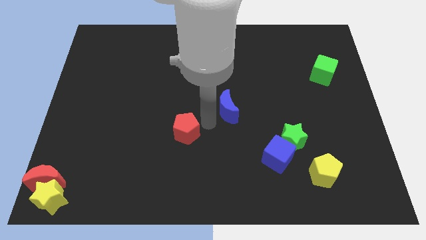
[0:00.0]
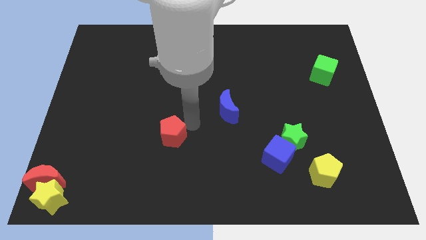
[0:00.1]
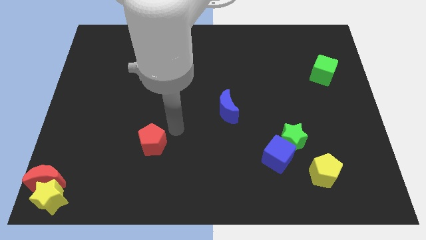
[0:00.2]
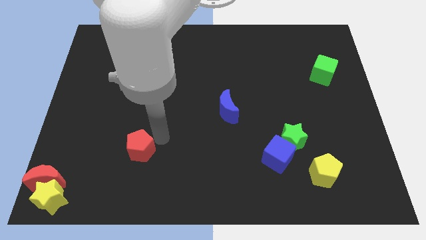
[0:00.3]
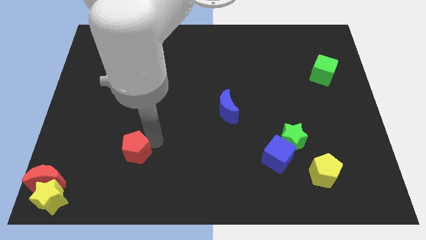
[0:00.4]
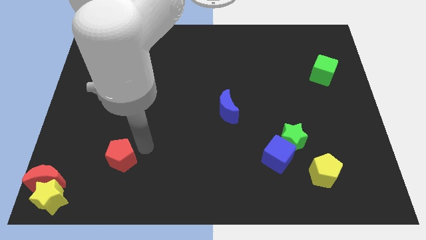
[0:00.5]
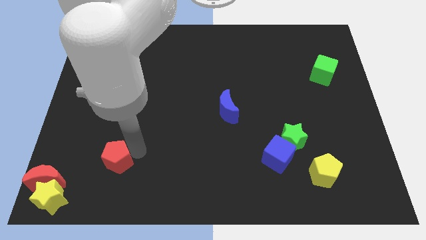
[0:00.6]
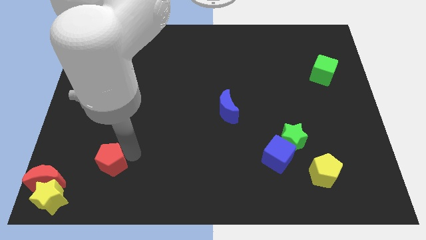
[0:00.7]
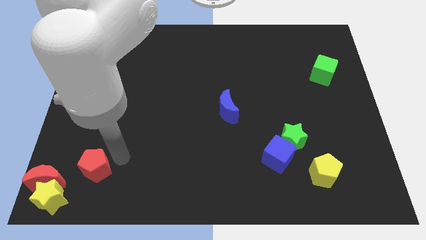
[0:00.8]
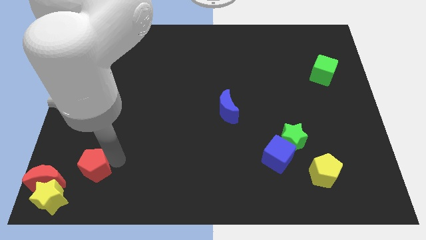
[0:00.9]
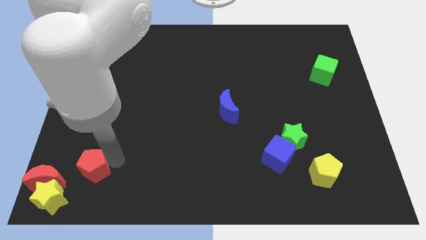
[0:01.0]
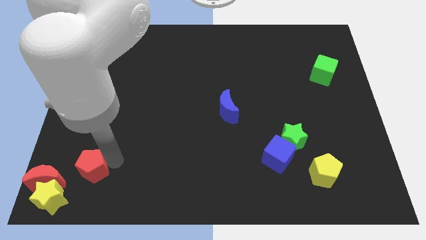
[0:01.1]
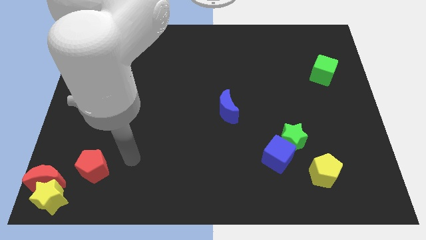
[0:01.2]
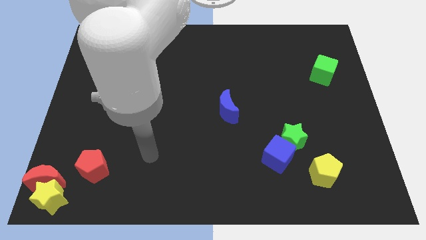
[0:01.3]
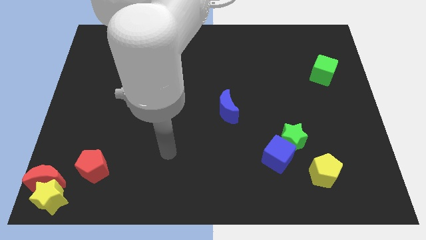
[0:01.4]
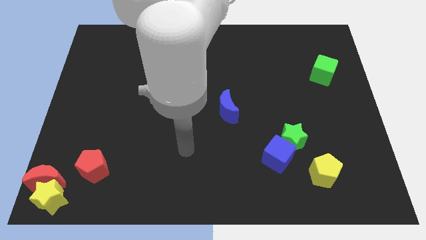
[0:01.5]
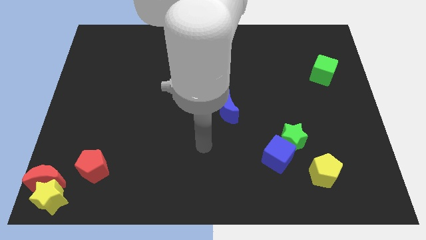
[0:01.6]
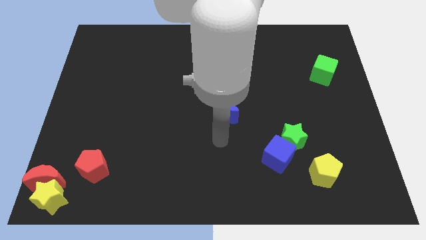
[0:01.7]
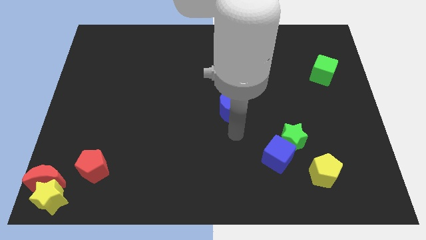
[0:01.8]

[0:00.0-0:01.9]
move the push the red pentagon opposite to the red crescent

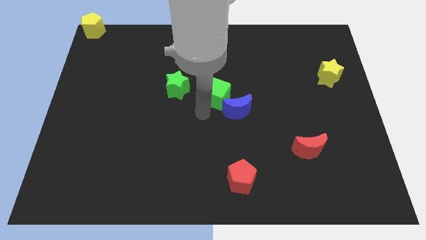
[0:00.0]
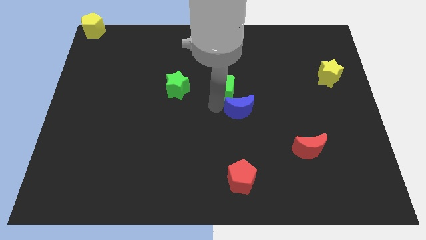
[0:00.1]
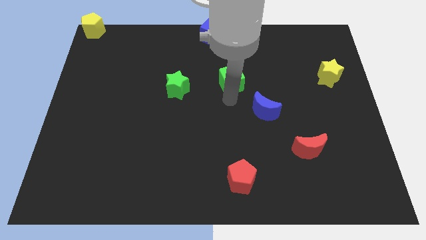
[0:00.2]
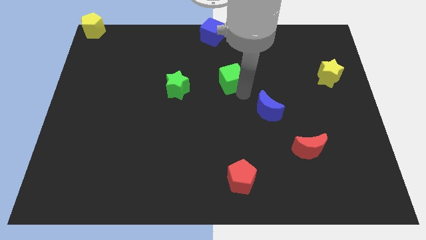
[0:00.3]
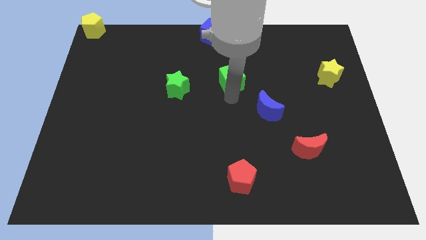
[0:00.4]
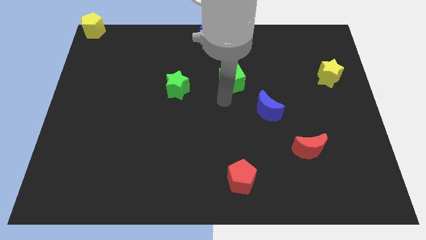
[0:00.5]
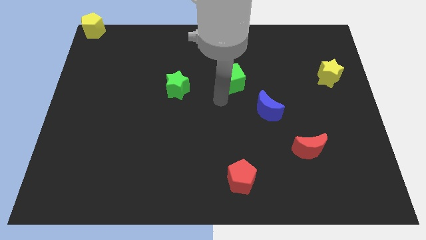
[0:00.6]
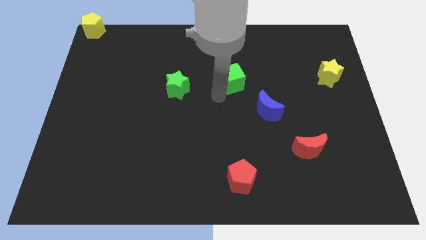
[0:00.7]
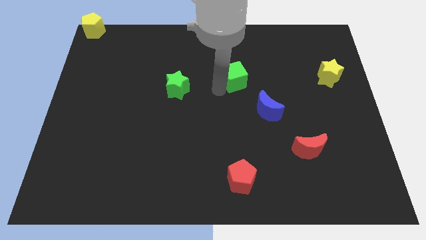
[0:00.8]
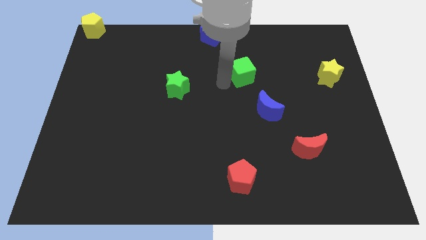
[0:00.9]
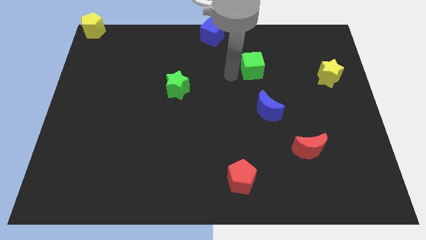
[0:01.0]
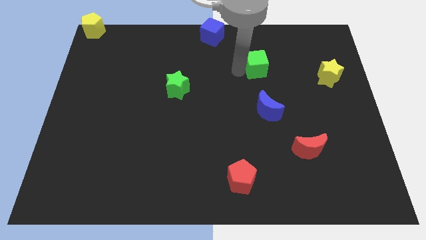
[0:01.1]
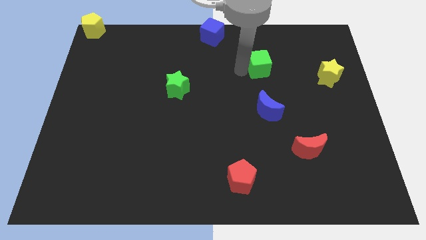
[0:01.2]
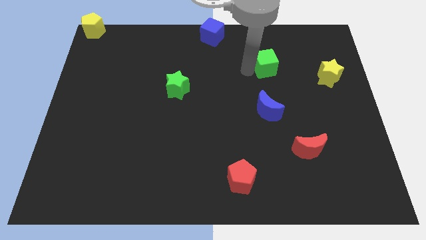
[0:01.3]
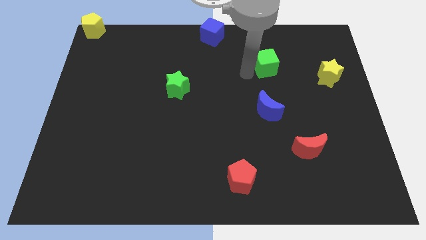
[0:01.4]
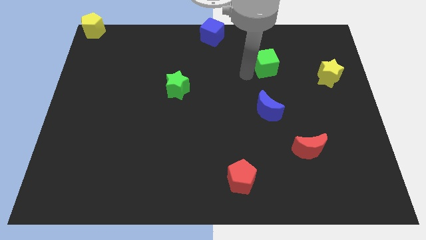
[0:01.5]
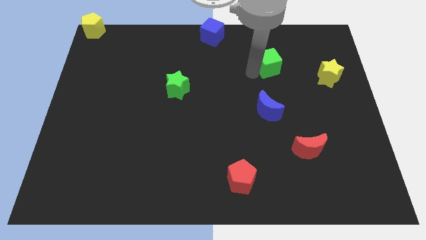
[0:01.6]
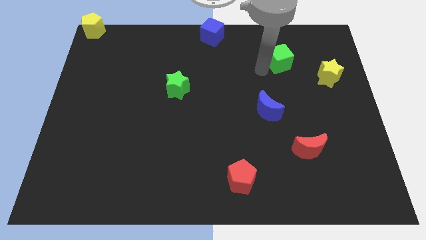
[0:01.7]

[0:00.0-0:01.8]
put the green cube at the top side of the blue moon

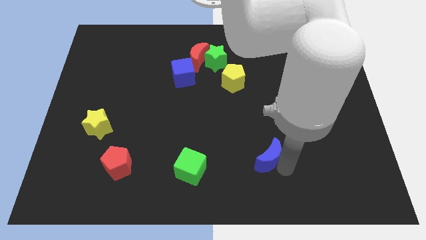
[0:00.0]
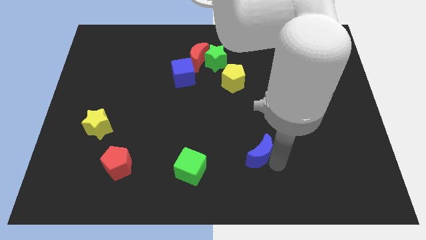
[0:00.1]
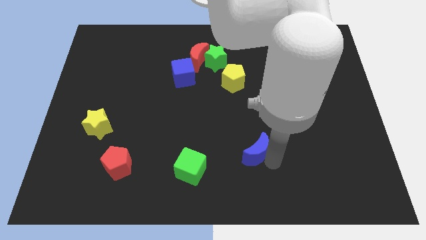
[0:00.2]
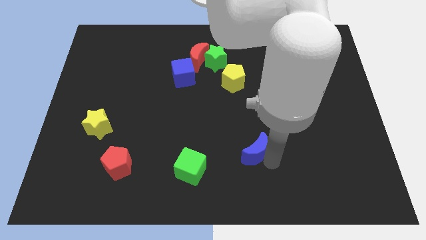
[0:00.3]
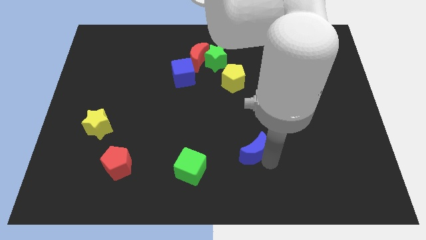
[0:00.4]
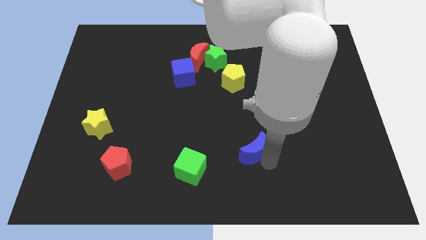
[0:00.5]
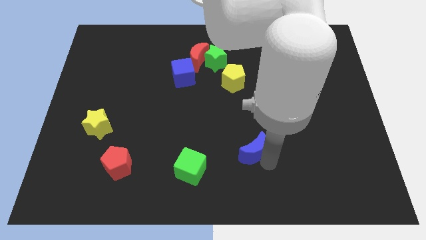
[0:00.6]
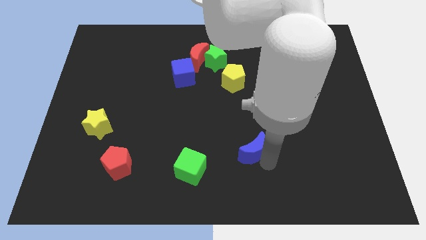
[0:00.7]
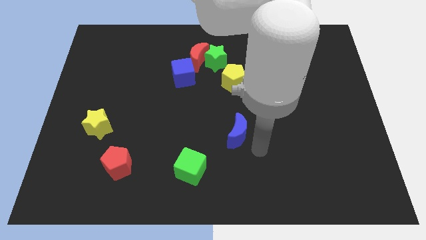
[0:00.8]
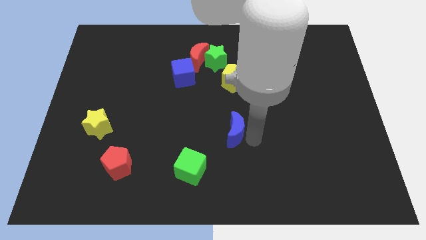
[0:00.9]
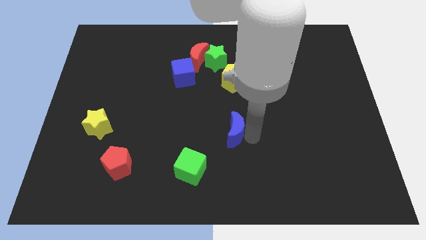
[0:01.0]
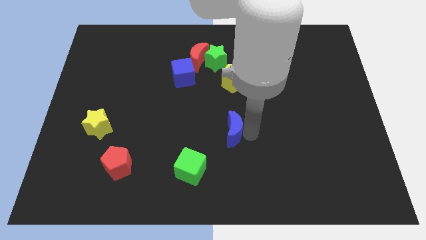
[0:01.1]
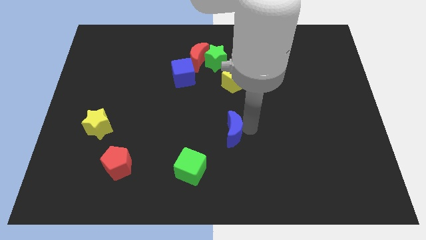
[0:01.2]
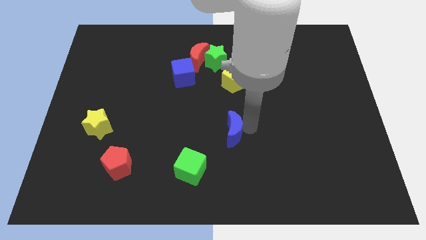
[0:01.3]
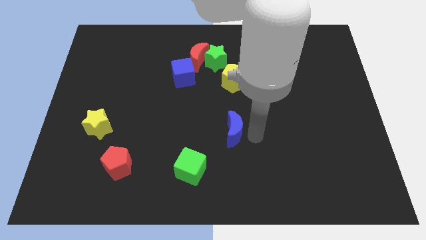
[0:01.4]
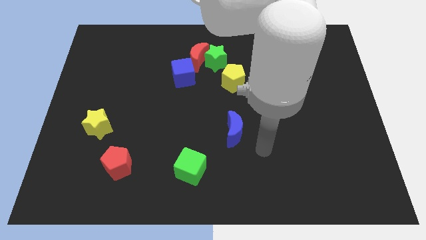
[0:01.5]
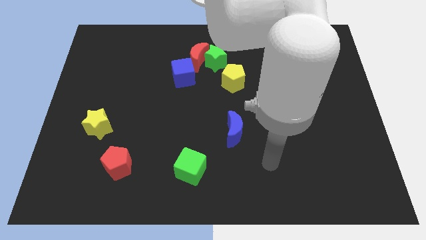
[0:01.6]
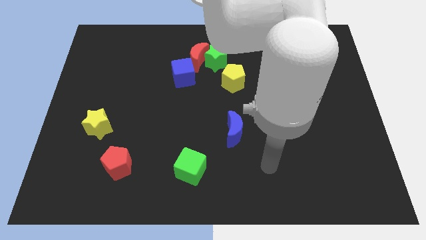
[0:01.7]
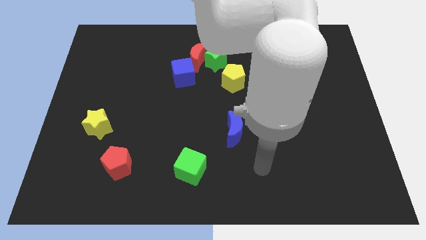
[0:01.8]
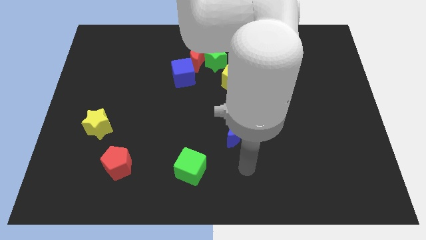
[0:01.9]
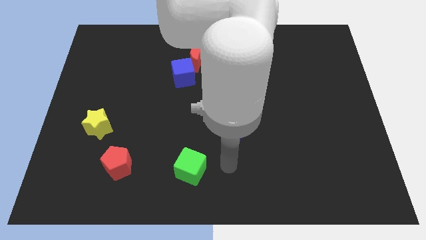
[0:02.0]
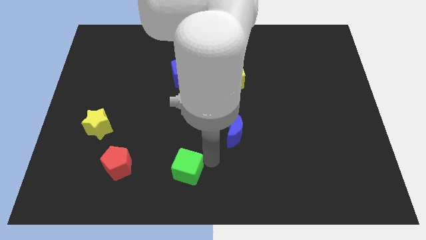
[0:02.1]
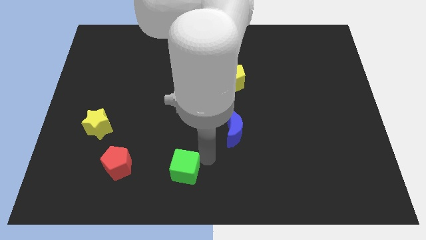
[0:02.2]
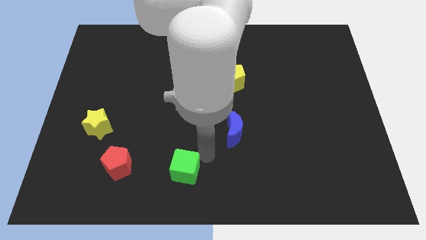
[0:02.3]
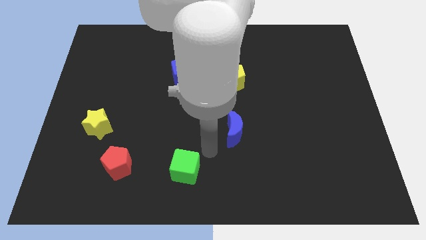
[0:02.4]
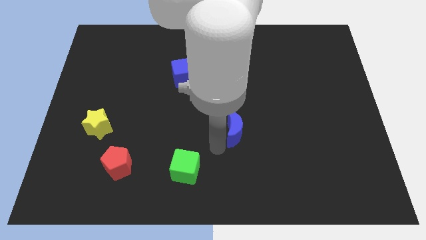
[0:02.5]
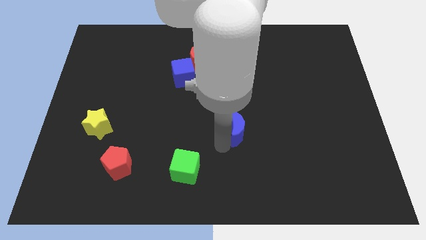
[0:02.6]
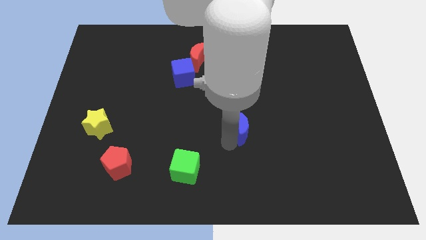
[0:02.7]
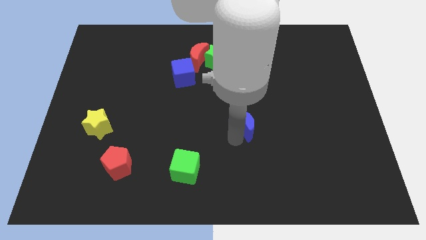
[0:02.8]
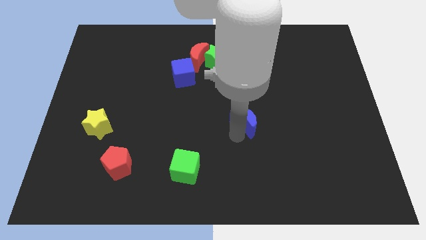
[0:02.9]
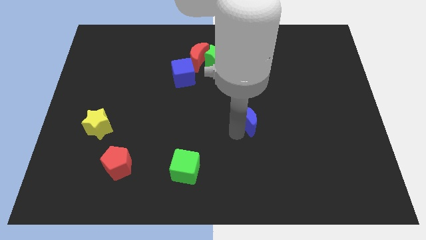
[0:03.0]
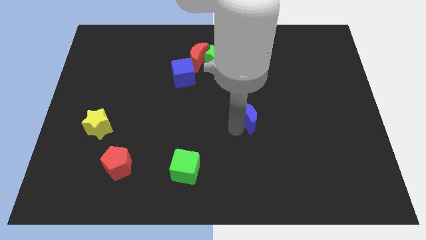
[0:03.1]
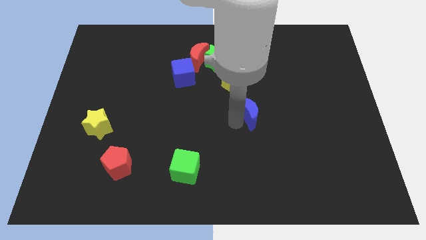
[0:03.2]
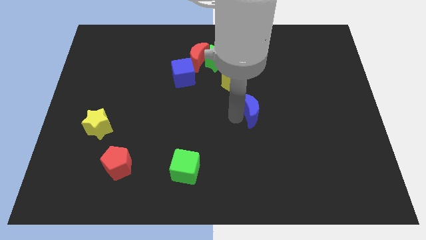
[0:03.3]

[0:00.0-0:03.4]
slide blue crescent towards top center

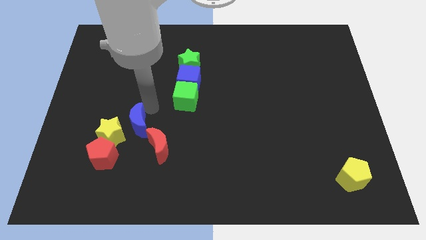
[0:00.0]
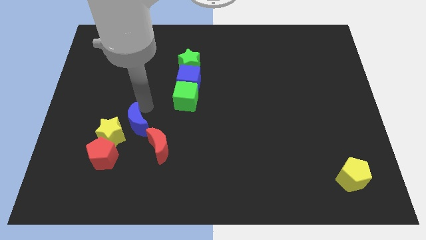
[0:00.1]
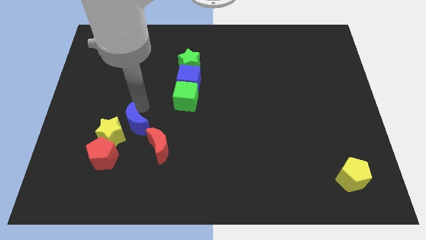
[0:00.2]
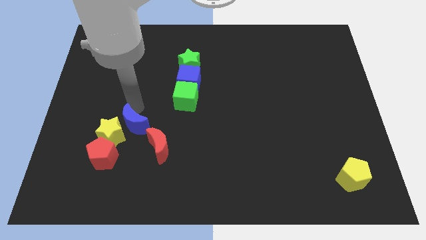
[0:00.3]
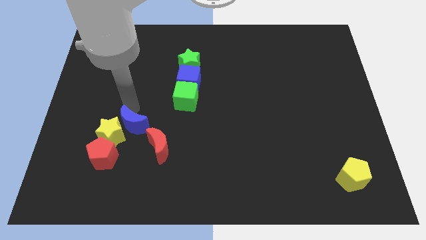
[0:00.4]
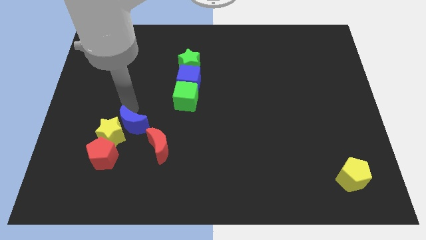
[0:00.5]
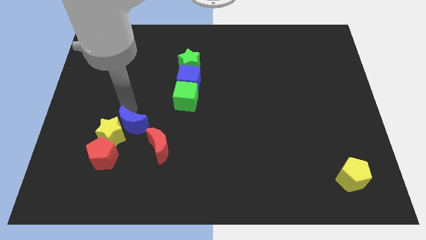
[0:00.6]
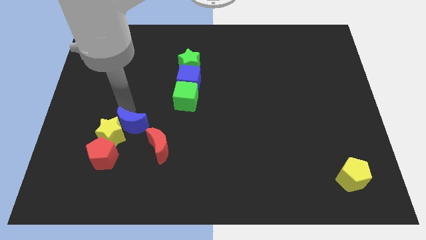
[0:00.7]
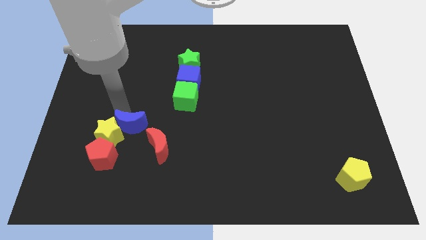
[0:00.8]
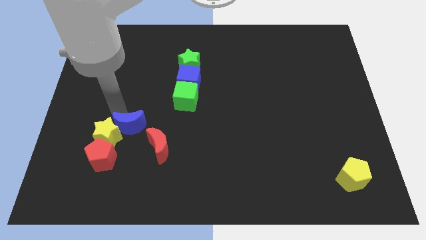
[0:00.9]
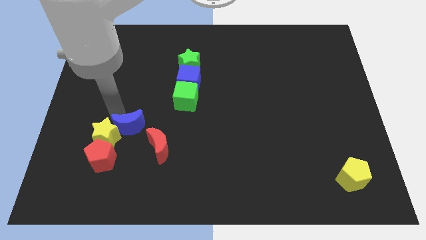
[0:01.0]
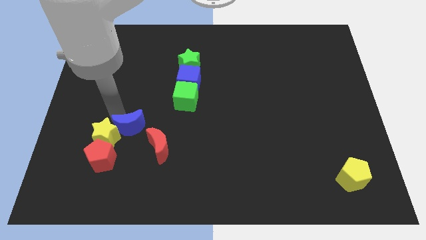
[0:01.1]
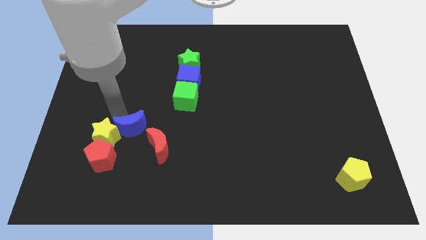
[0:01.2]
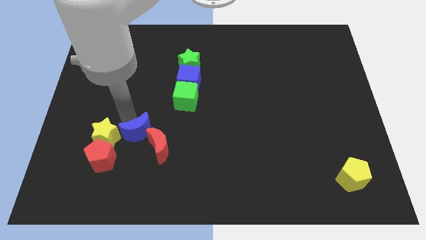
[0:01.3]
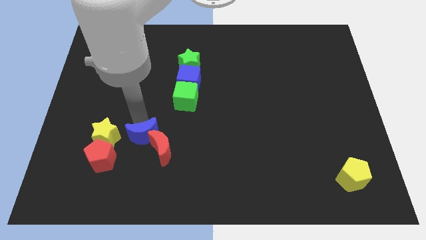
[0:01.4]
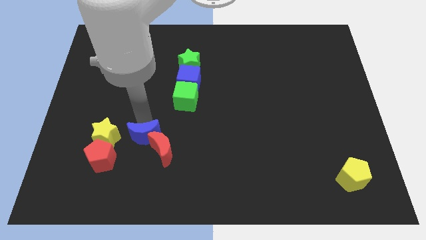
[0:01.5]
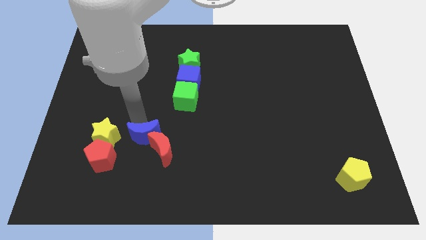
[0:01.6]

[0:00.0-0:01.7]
push the blue crescent into red crescent
